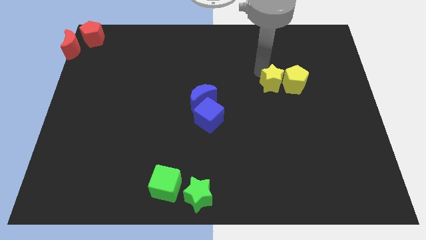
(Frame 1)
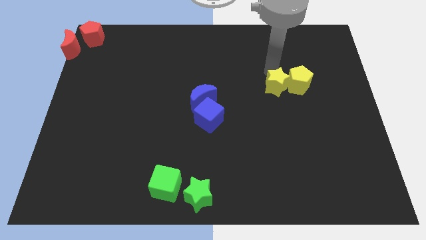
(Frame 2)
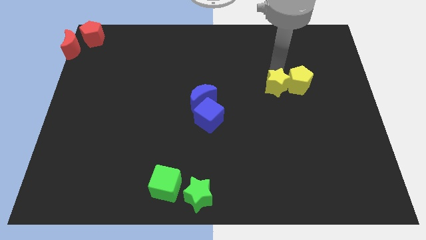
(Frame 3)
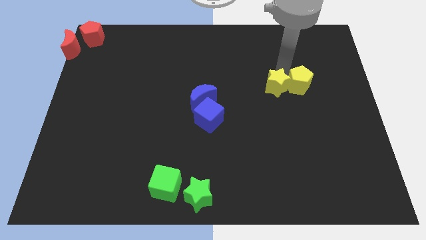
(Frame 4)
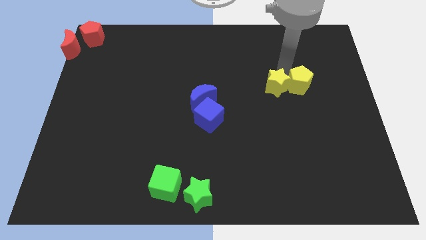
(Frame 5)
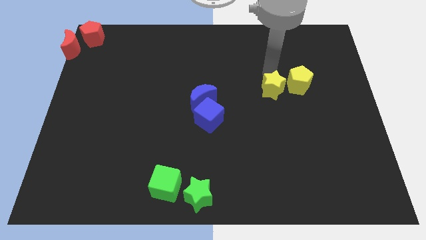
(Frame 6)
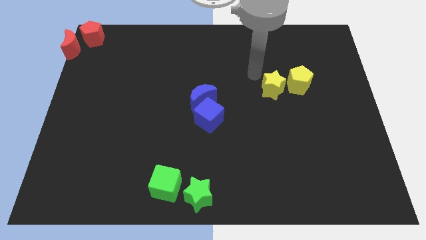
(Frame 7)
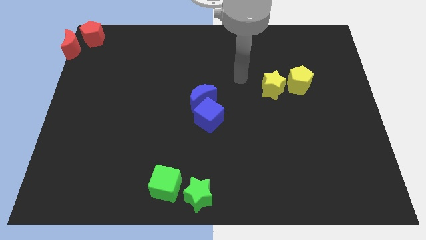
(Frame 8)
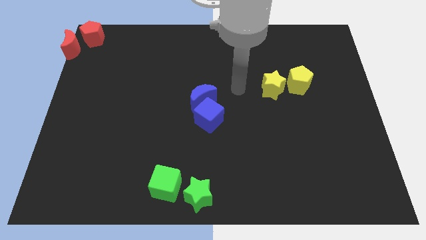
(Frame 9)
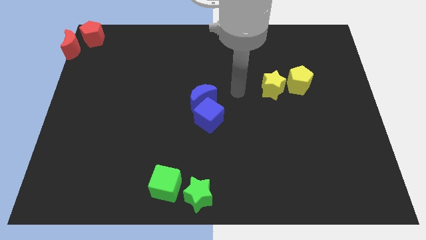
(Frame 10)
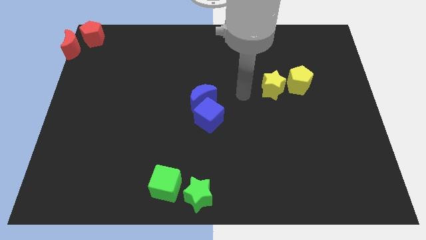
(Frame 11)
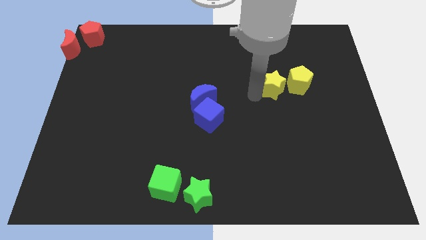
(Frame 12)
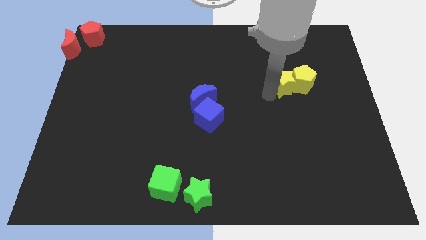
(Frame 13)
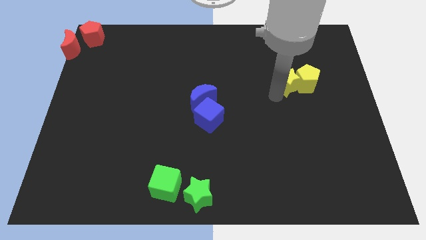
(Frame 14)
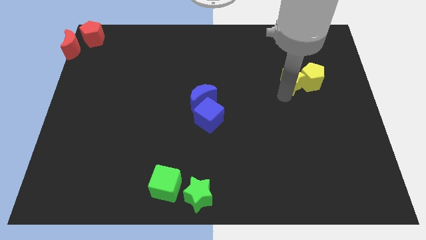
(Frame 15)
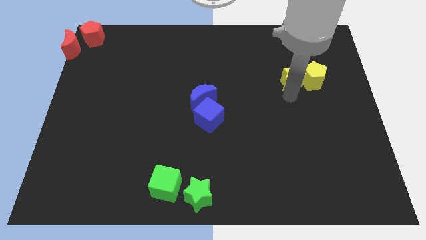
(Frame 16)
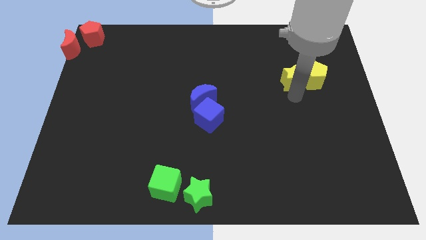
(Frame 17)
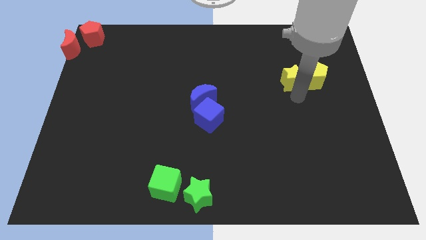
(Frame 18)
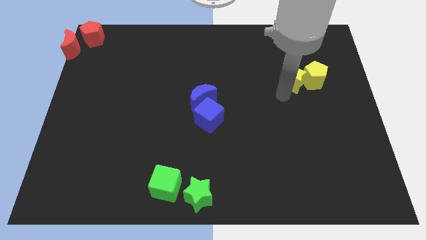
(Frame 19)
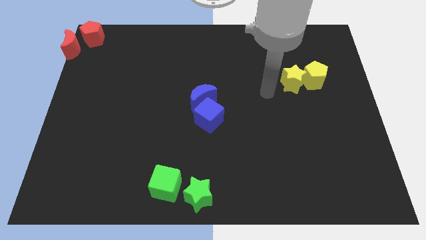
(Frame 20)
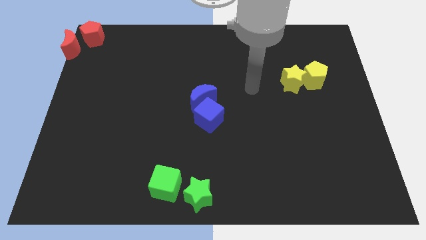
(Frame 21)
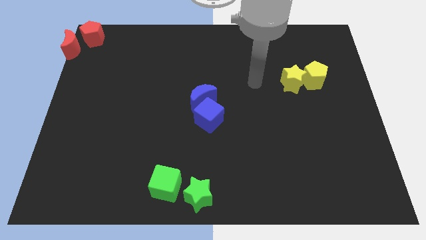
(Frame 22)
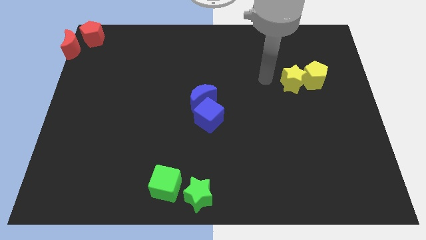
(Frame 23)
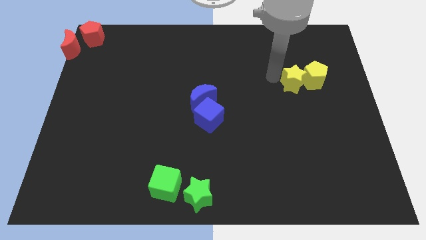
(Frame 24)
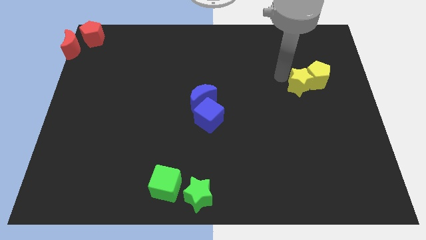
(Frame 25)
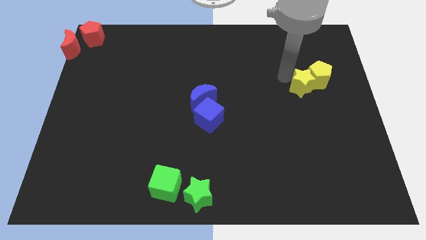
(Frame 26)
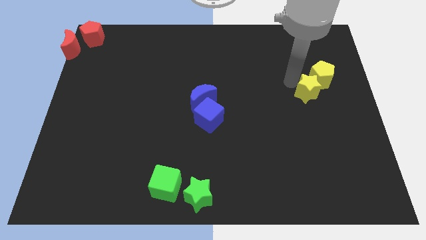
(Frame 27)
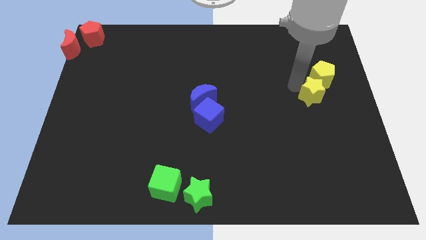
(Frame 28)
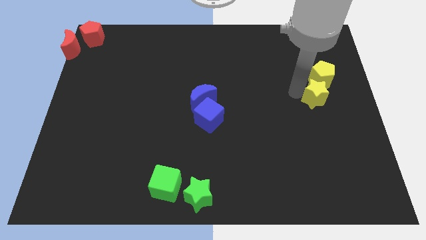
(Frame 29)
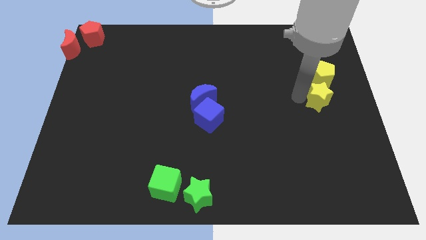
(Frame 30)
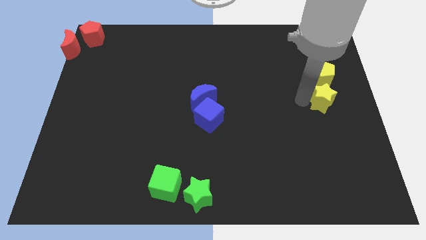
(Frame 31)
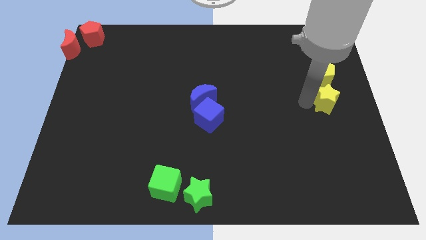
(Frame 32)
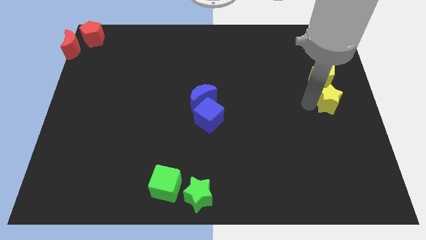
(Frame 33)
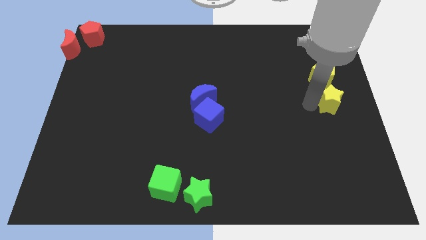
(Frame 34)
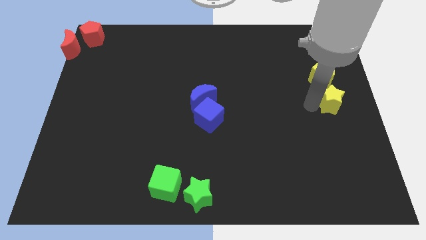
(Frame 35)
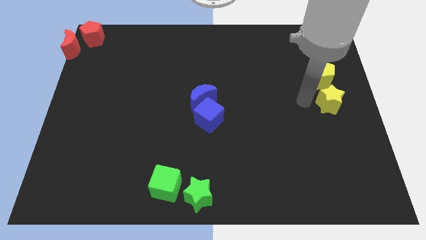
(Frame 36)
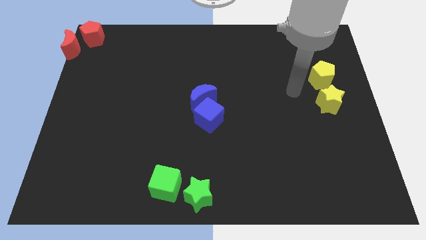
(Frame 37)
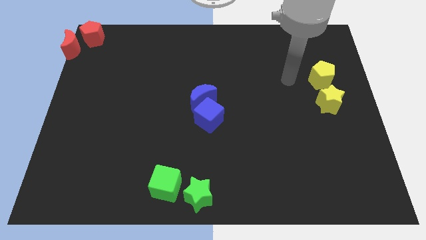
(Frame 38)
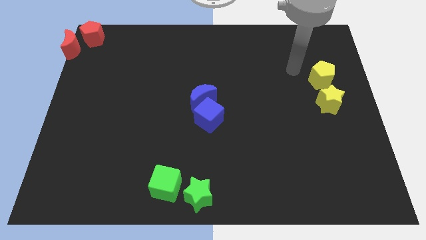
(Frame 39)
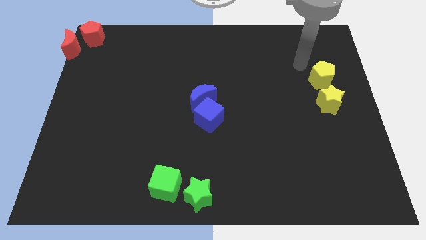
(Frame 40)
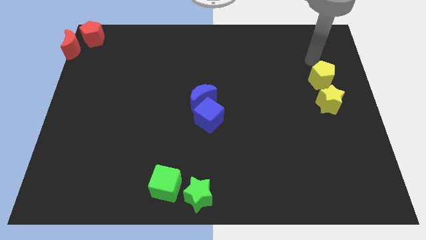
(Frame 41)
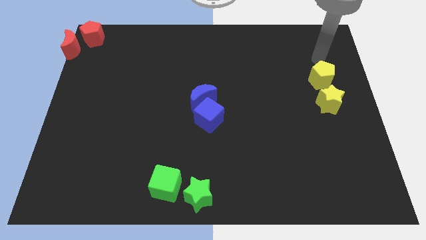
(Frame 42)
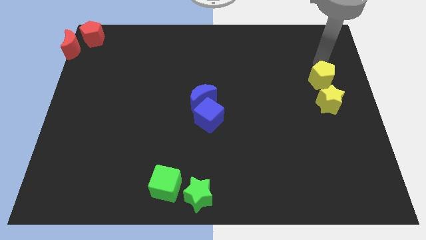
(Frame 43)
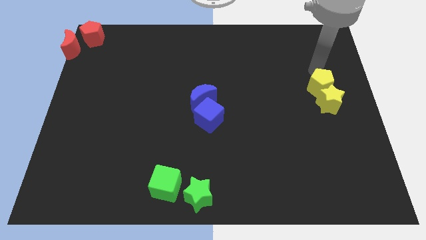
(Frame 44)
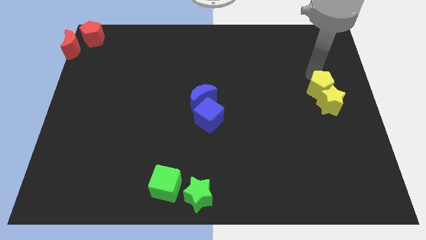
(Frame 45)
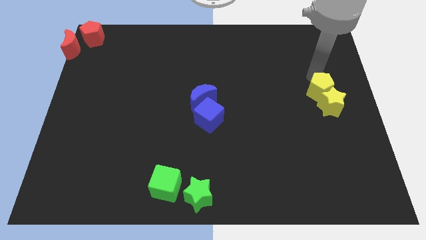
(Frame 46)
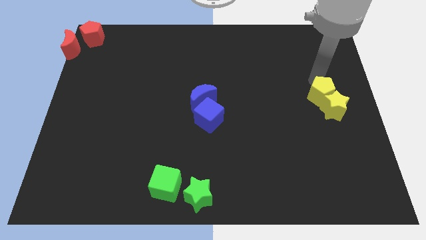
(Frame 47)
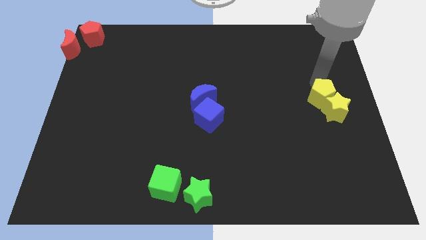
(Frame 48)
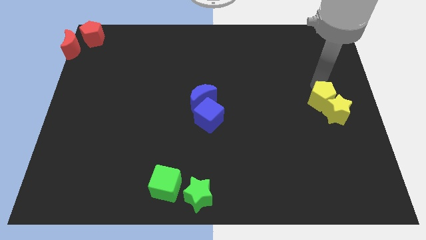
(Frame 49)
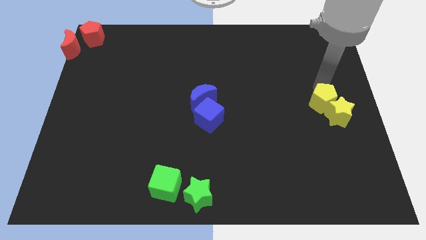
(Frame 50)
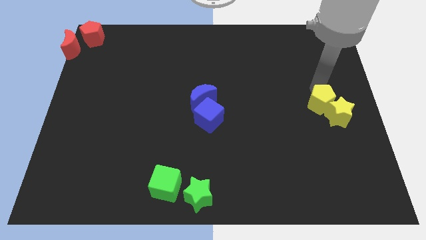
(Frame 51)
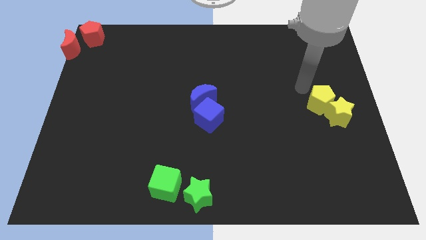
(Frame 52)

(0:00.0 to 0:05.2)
place the yellow blocks to the right center of the board

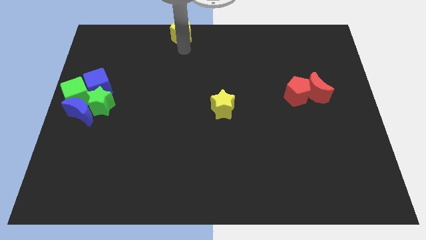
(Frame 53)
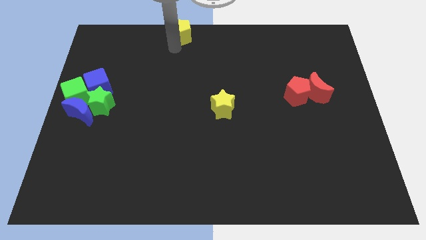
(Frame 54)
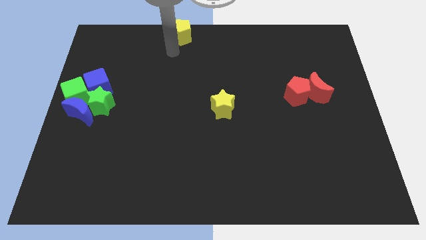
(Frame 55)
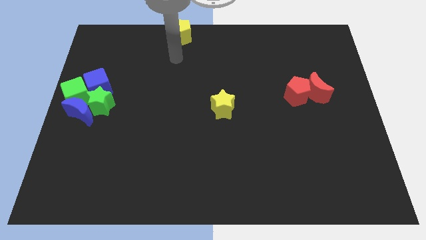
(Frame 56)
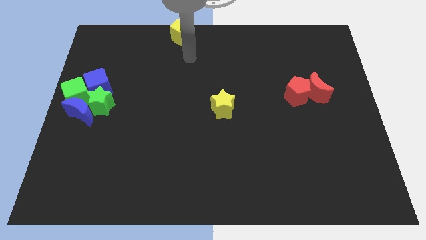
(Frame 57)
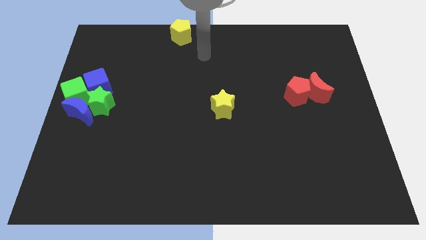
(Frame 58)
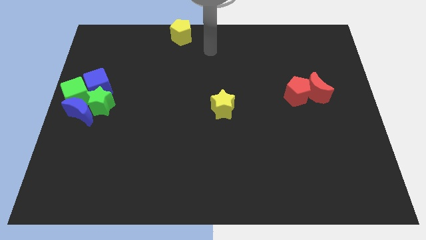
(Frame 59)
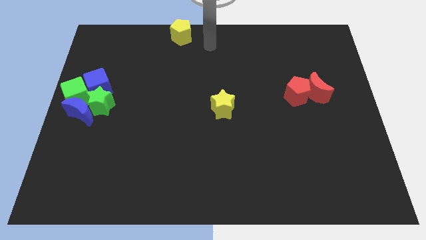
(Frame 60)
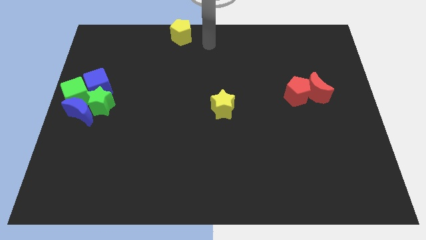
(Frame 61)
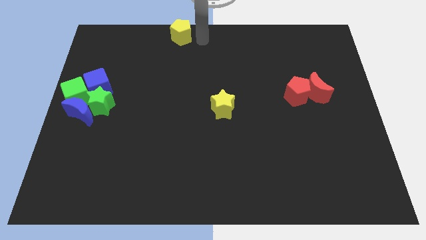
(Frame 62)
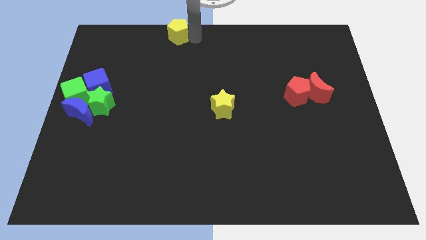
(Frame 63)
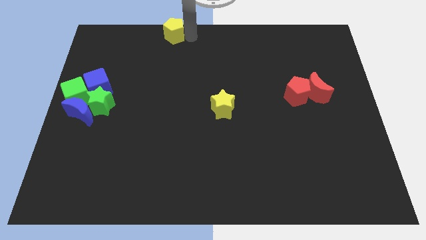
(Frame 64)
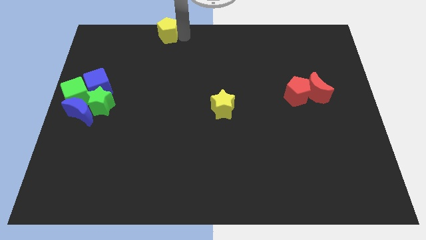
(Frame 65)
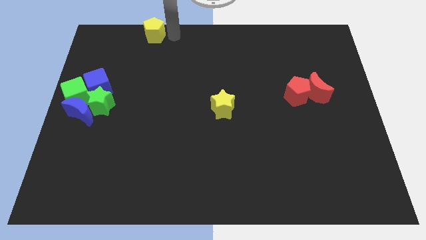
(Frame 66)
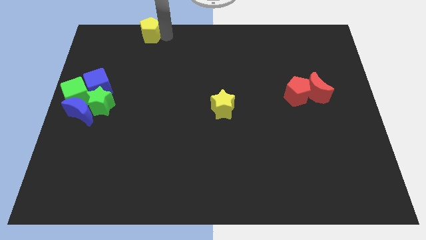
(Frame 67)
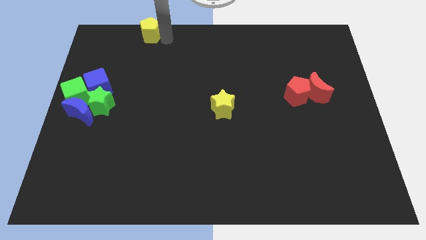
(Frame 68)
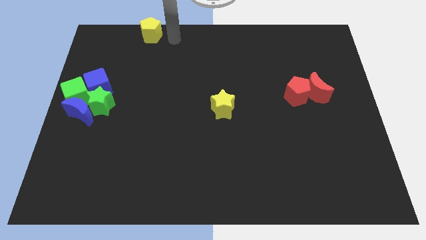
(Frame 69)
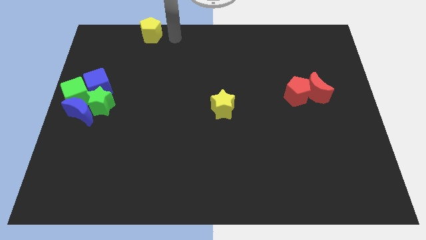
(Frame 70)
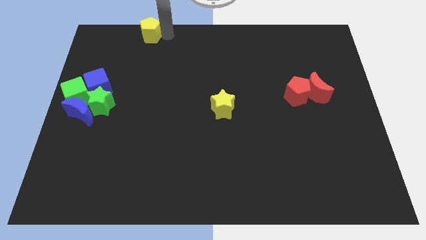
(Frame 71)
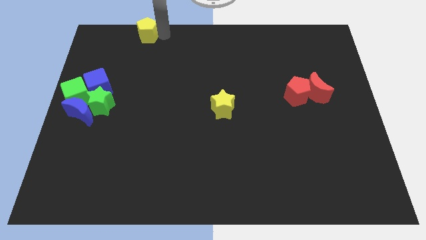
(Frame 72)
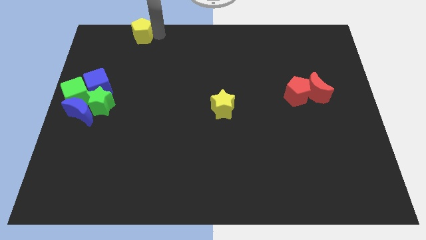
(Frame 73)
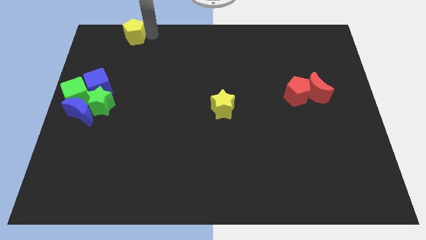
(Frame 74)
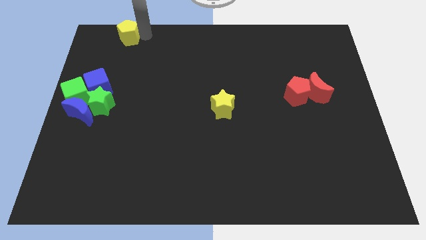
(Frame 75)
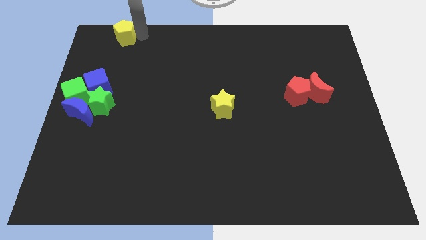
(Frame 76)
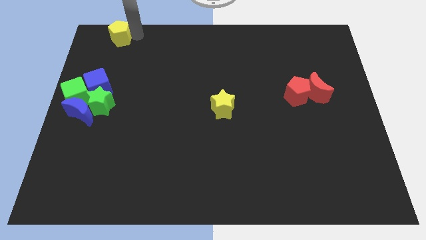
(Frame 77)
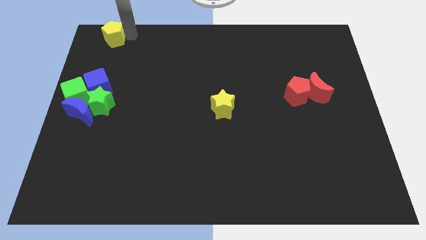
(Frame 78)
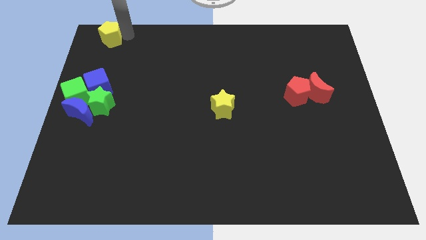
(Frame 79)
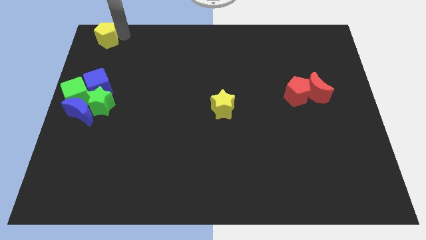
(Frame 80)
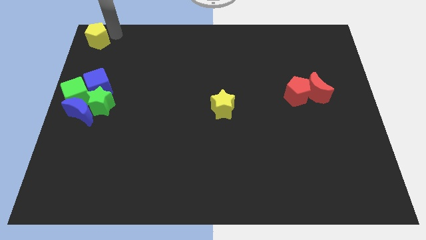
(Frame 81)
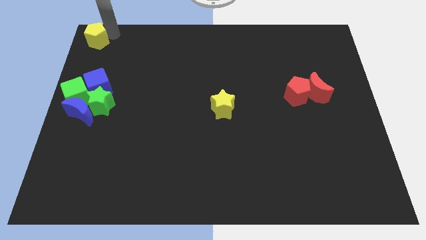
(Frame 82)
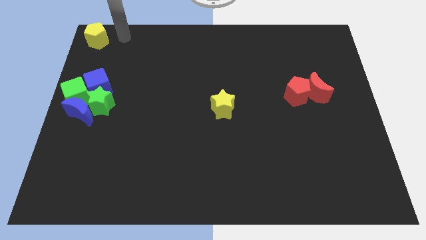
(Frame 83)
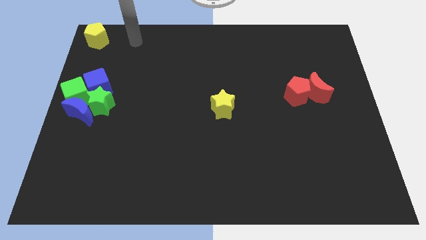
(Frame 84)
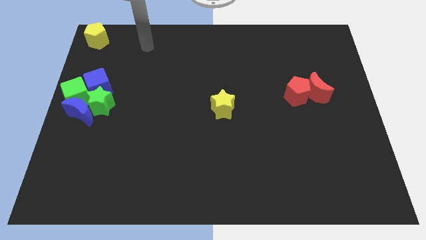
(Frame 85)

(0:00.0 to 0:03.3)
move yellow pentagon to the top left corner of the board

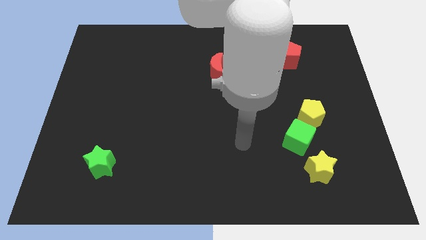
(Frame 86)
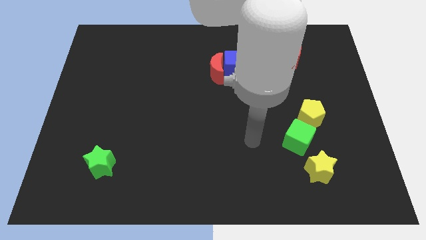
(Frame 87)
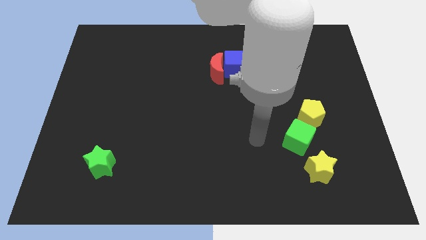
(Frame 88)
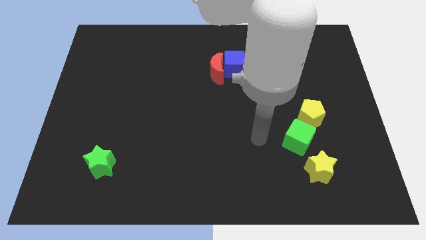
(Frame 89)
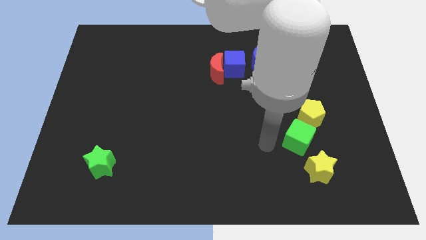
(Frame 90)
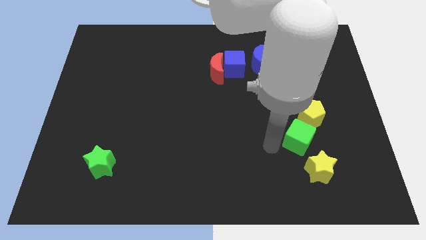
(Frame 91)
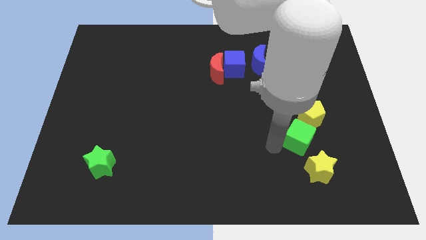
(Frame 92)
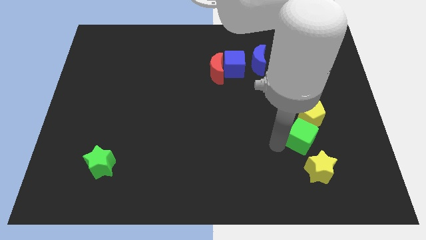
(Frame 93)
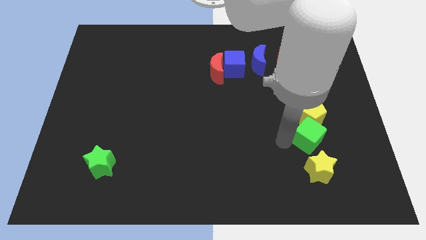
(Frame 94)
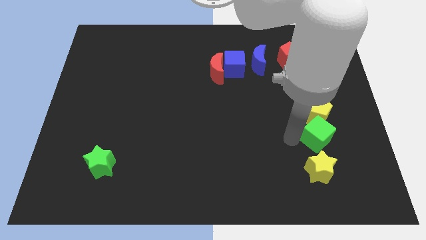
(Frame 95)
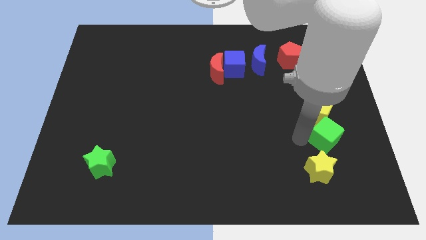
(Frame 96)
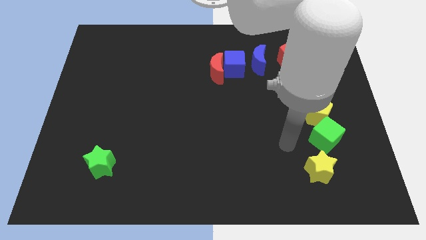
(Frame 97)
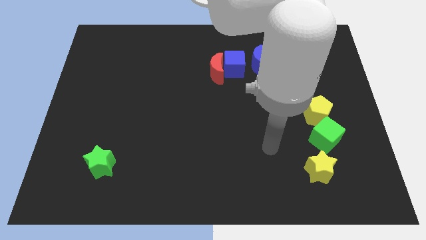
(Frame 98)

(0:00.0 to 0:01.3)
place the green cube in between the yellow star and yellow pentagon to form a vertical line
